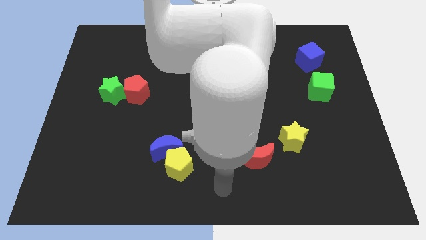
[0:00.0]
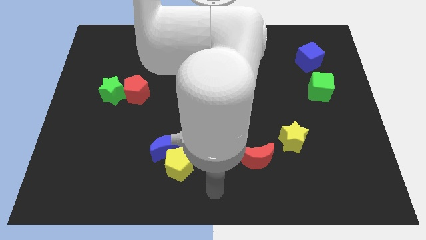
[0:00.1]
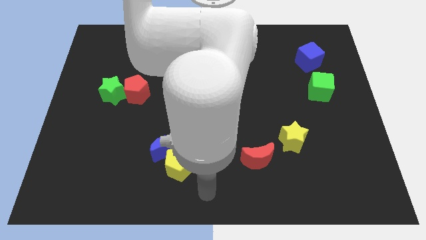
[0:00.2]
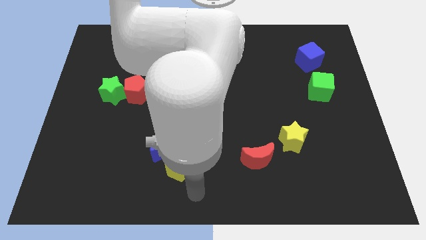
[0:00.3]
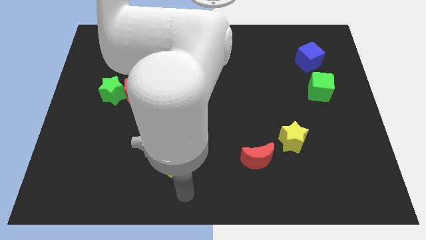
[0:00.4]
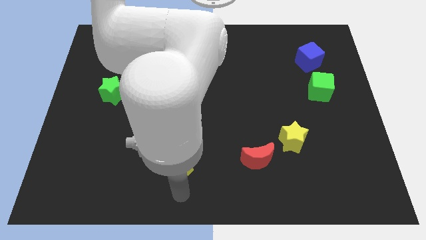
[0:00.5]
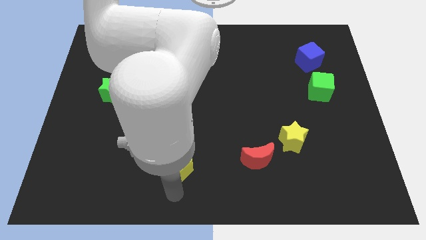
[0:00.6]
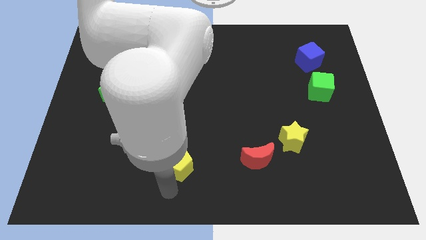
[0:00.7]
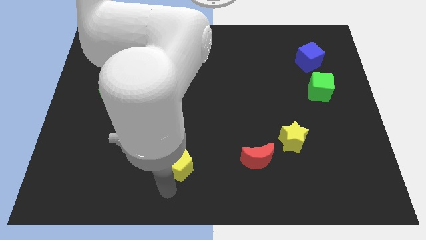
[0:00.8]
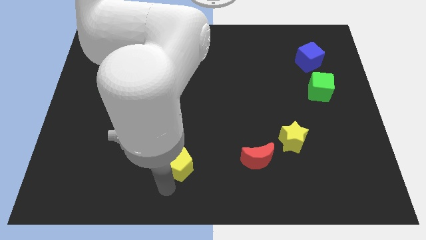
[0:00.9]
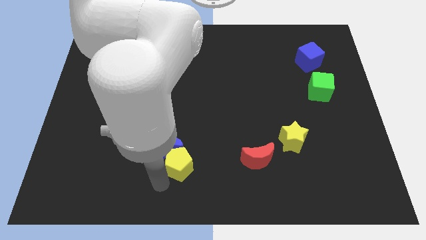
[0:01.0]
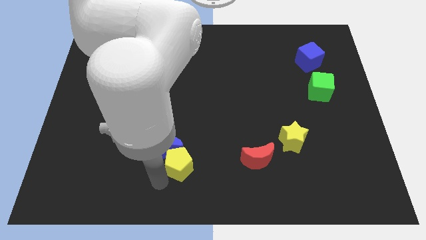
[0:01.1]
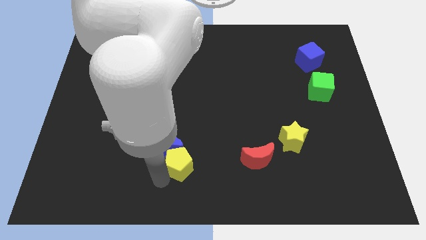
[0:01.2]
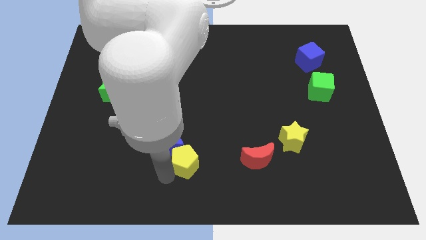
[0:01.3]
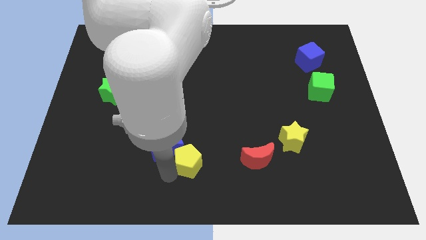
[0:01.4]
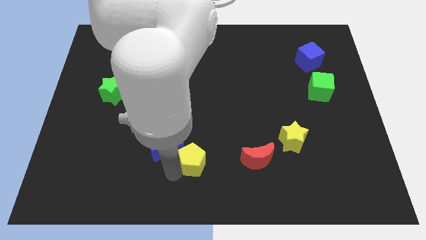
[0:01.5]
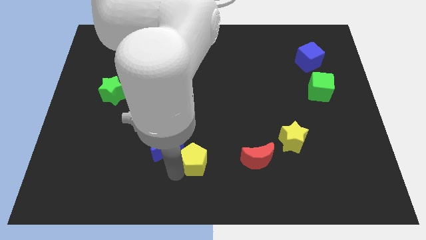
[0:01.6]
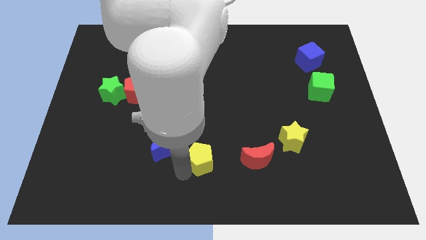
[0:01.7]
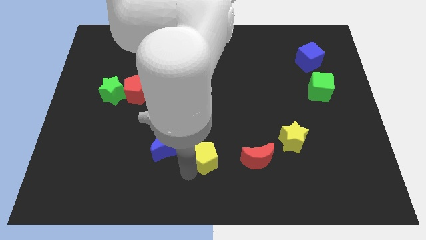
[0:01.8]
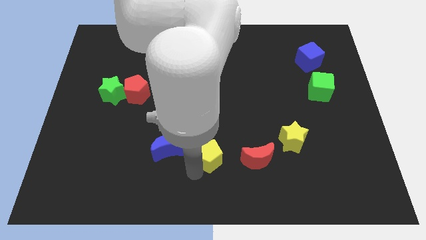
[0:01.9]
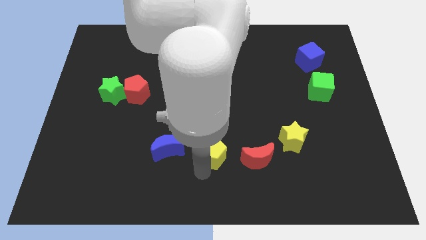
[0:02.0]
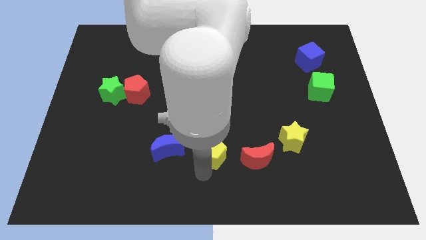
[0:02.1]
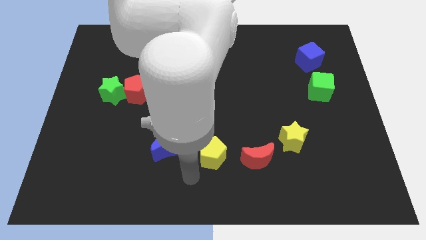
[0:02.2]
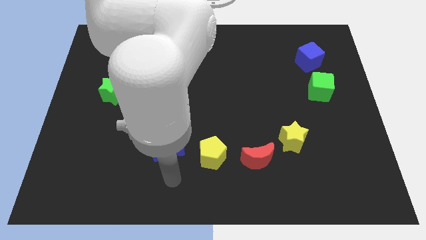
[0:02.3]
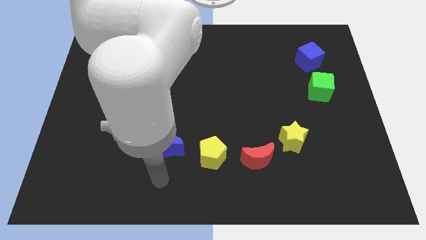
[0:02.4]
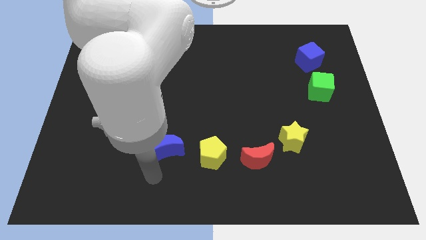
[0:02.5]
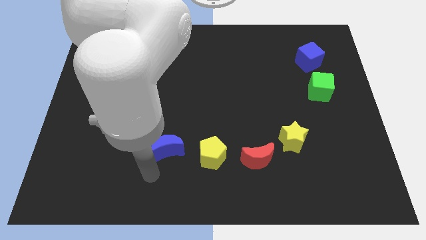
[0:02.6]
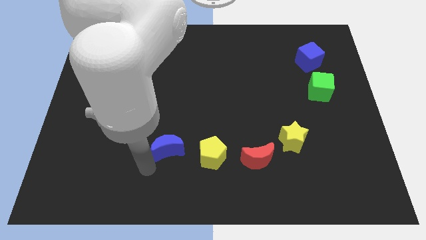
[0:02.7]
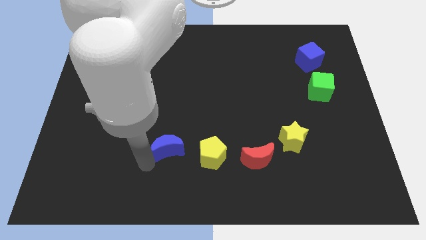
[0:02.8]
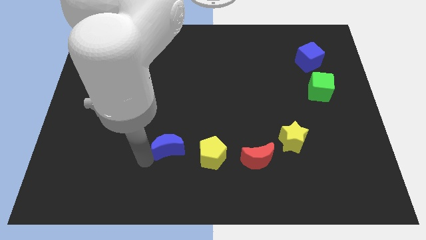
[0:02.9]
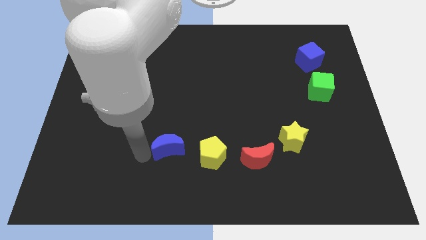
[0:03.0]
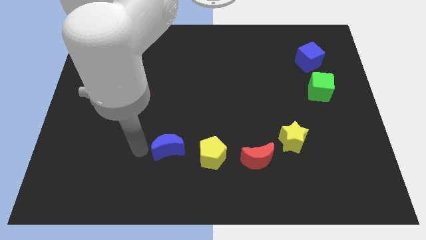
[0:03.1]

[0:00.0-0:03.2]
place yellow pentagon in between blue and red moons

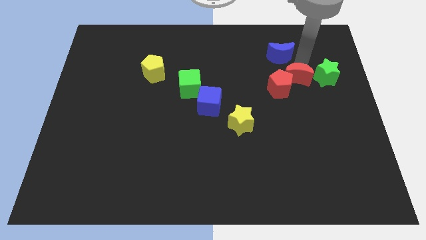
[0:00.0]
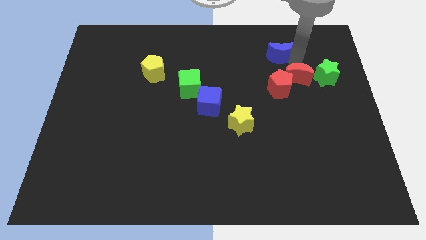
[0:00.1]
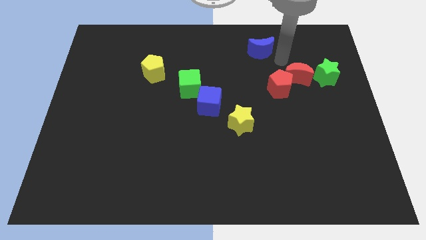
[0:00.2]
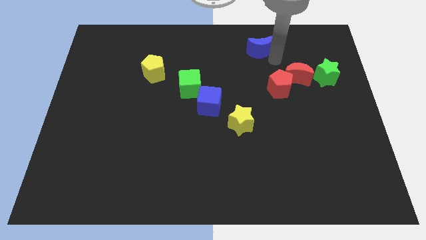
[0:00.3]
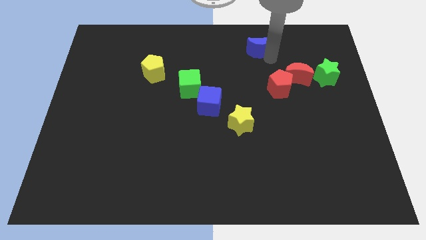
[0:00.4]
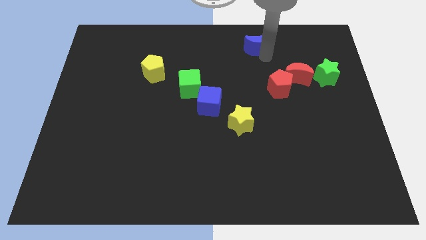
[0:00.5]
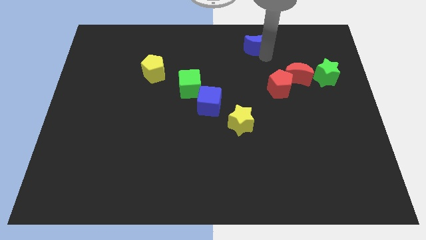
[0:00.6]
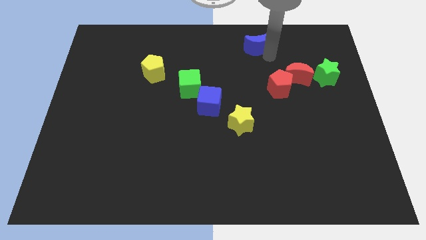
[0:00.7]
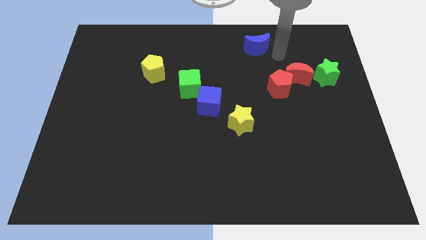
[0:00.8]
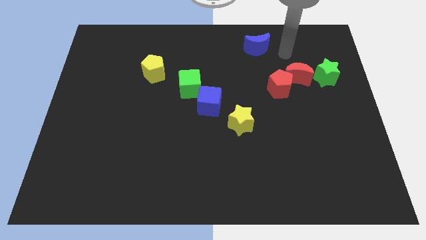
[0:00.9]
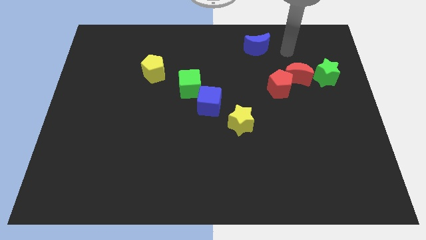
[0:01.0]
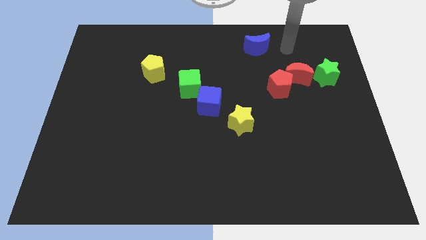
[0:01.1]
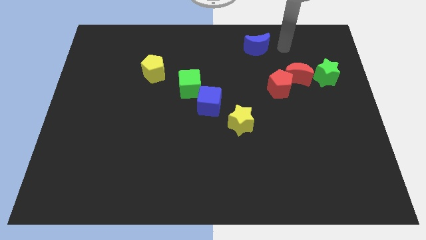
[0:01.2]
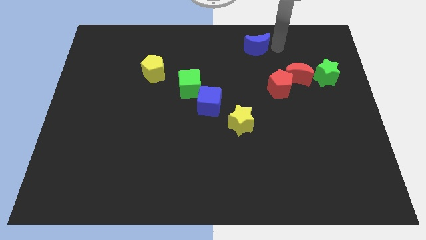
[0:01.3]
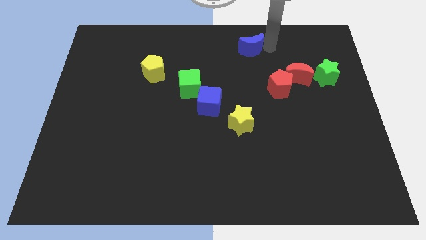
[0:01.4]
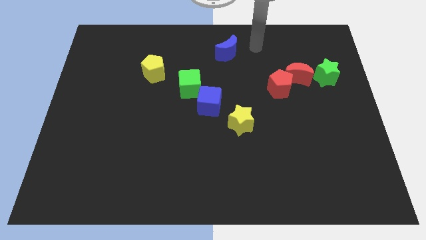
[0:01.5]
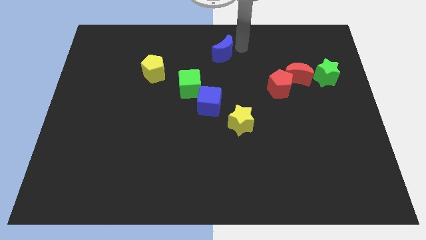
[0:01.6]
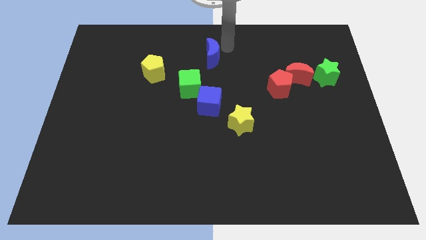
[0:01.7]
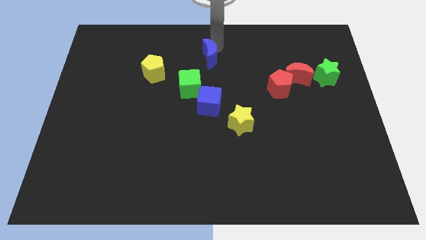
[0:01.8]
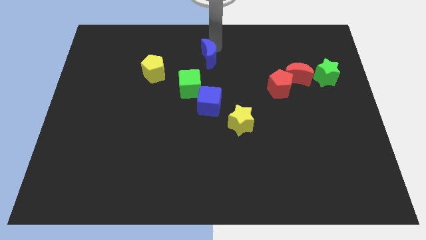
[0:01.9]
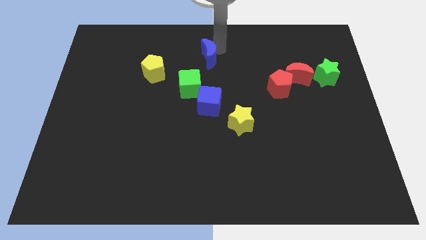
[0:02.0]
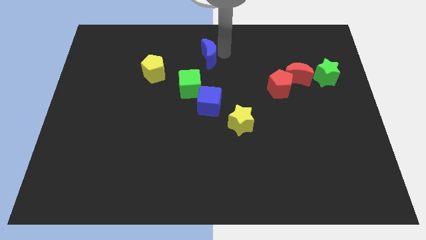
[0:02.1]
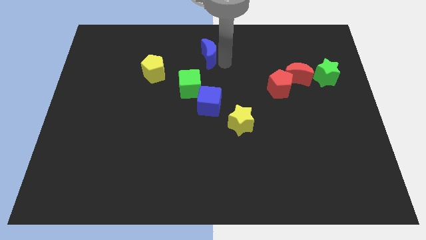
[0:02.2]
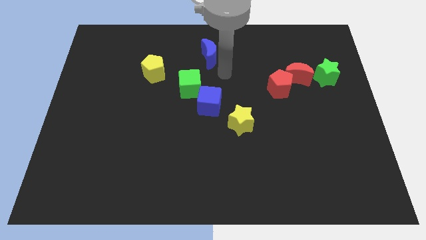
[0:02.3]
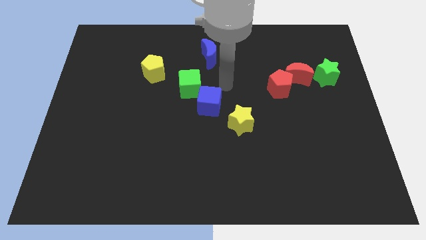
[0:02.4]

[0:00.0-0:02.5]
push the blue moon to the vertical top of the blue cube

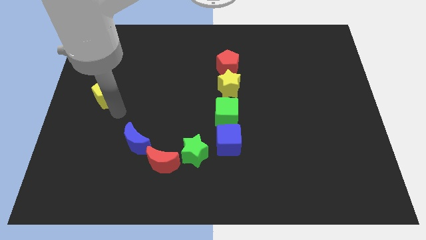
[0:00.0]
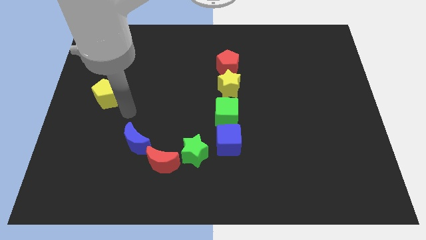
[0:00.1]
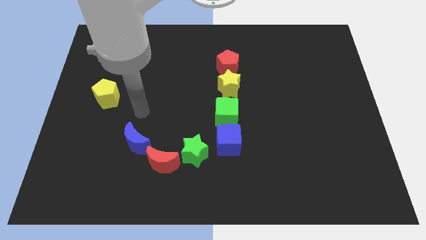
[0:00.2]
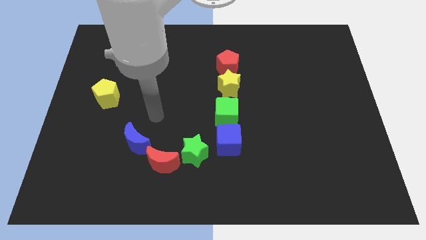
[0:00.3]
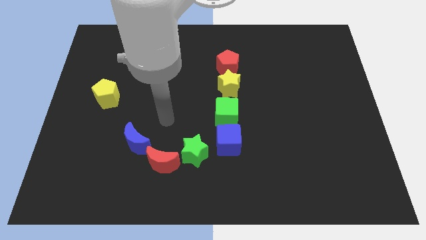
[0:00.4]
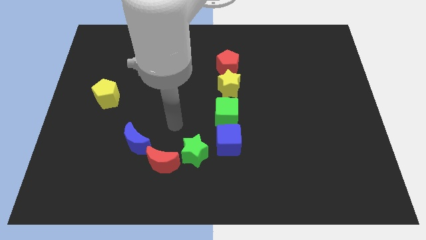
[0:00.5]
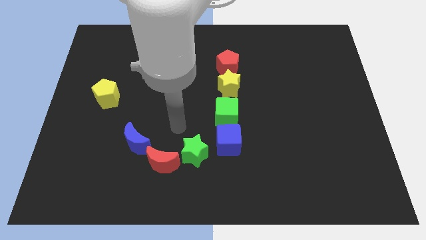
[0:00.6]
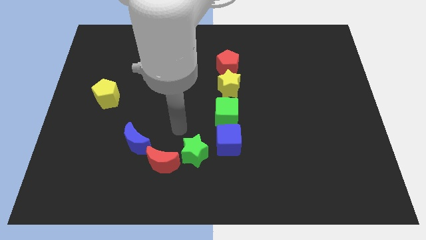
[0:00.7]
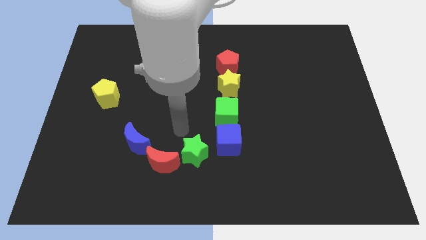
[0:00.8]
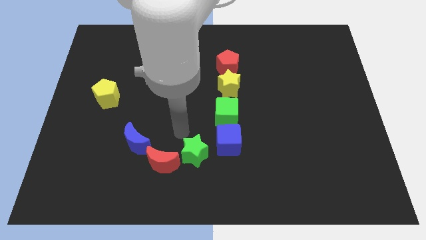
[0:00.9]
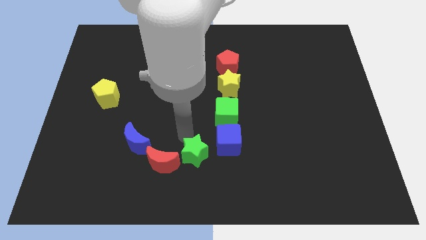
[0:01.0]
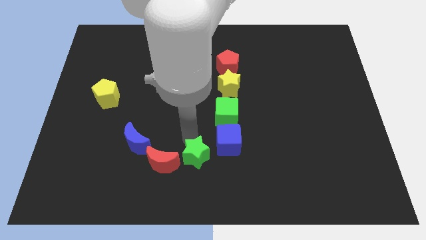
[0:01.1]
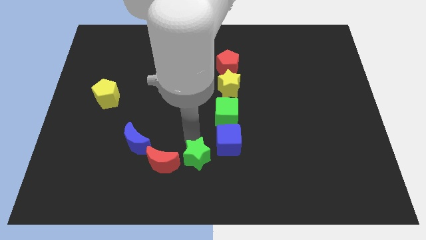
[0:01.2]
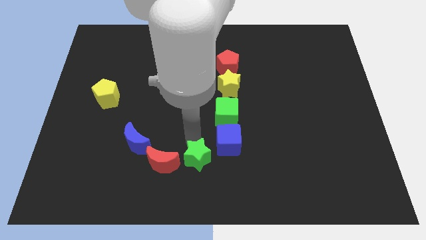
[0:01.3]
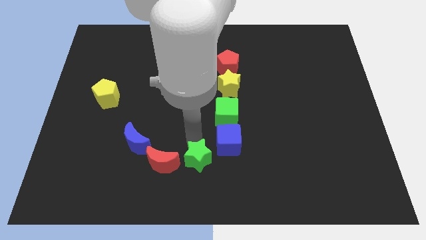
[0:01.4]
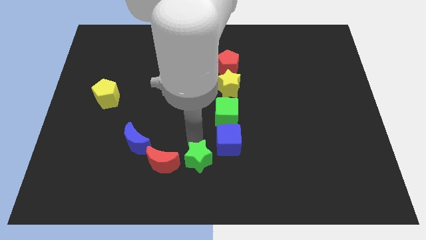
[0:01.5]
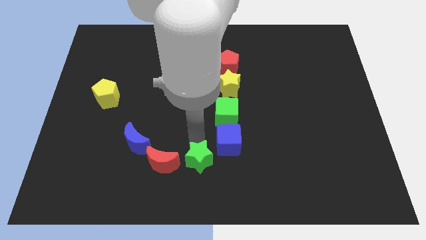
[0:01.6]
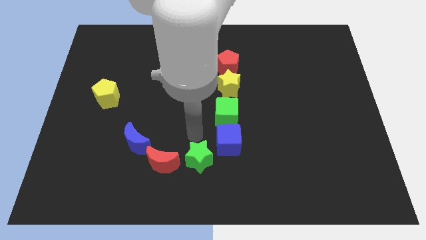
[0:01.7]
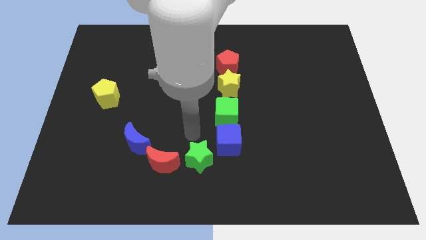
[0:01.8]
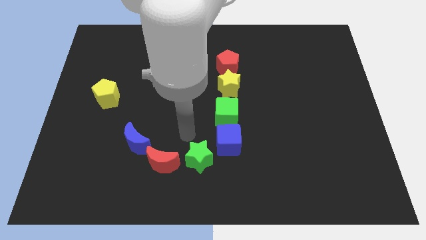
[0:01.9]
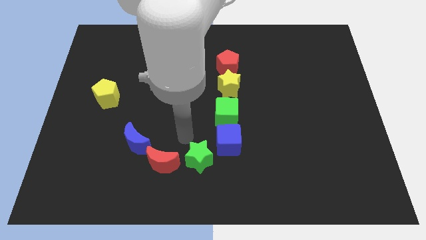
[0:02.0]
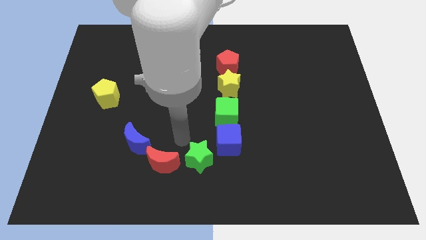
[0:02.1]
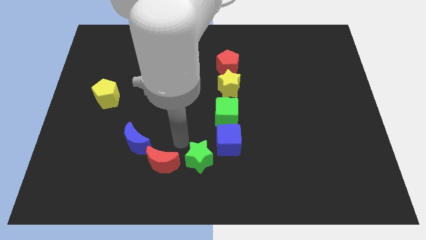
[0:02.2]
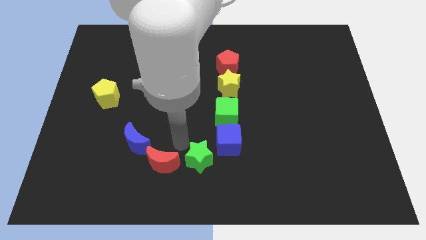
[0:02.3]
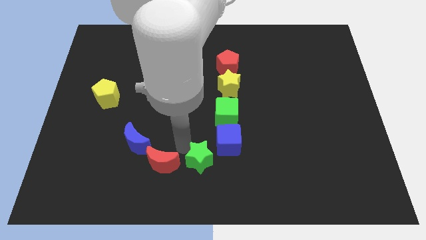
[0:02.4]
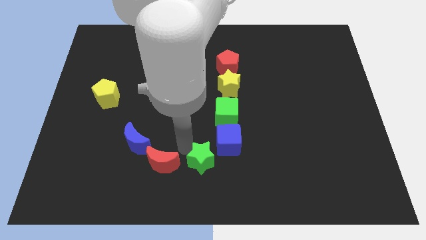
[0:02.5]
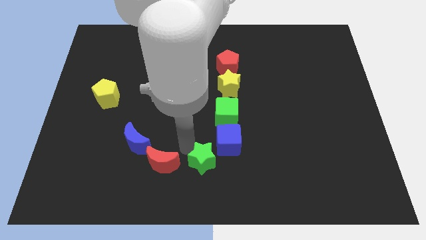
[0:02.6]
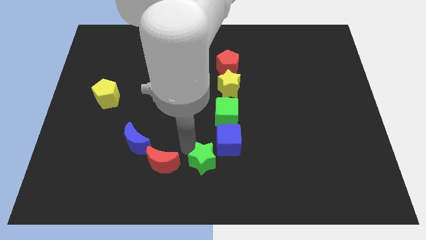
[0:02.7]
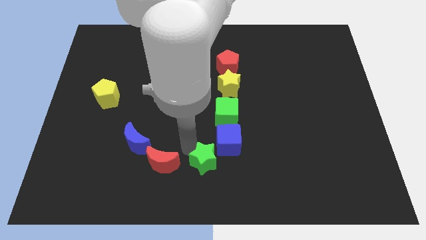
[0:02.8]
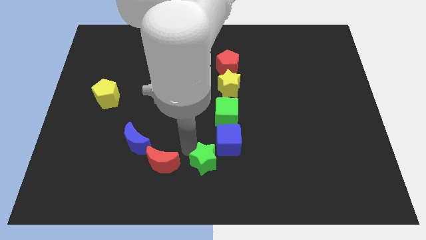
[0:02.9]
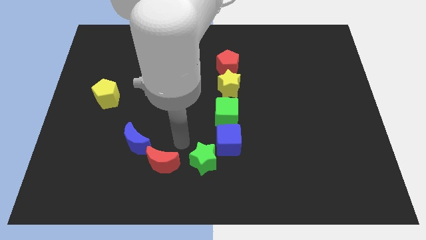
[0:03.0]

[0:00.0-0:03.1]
push green star slightly downwards
